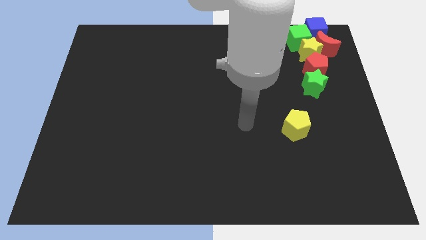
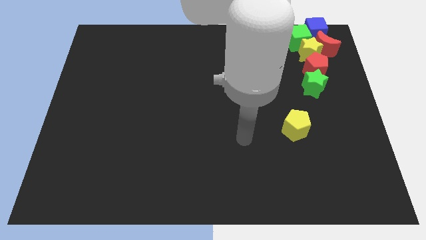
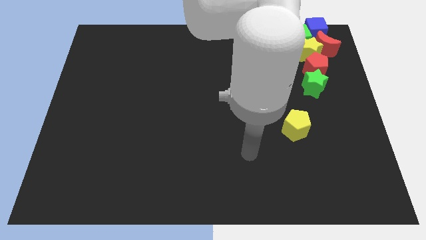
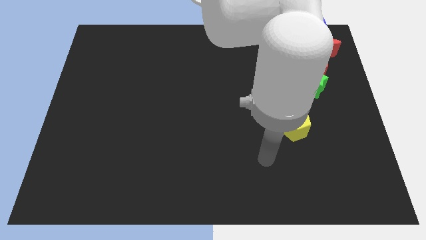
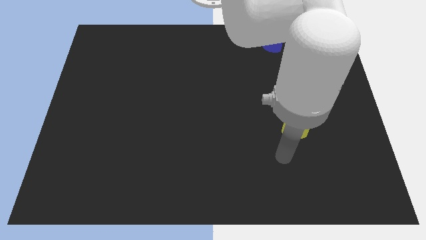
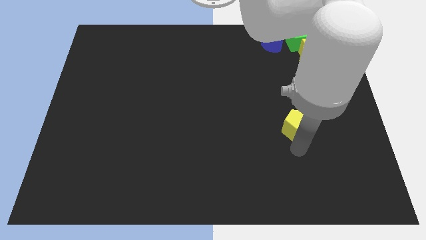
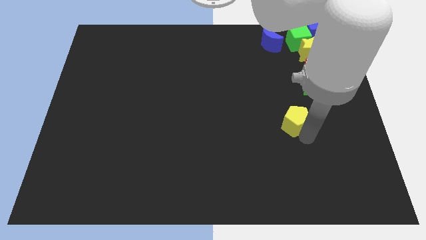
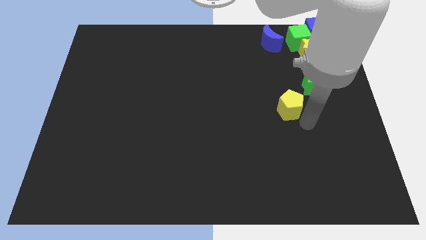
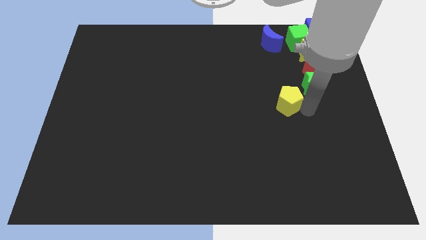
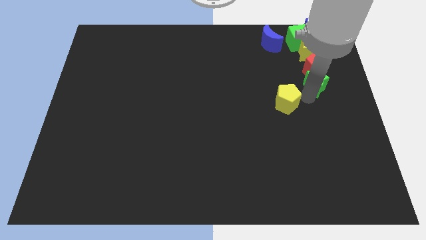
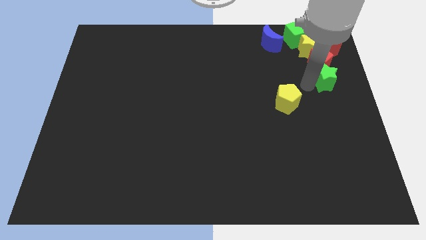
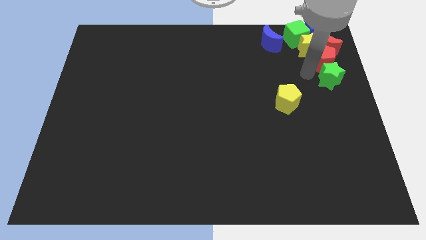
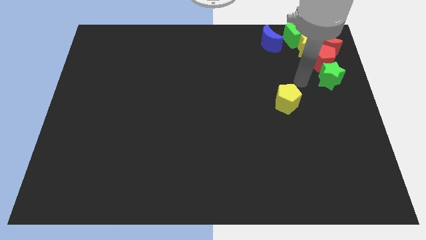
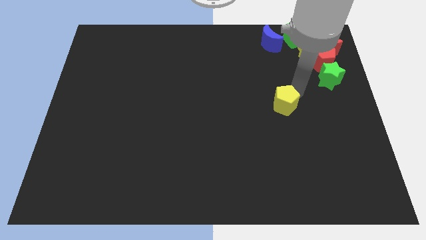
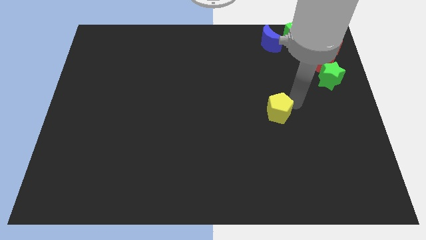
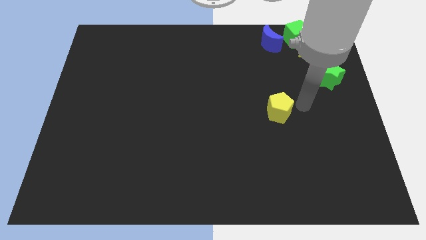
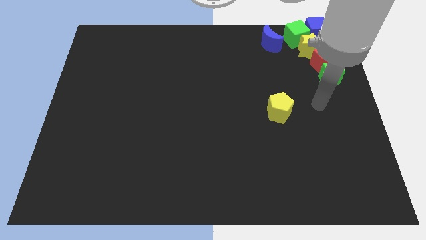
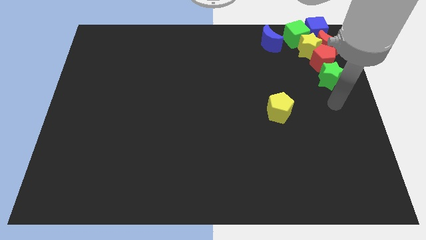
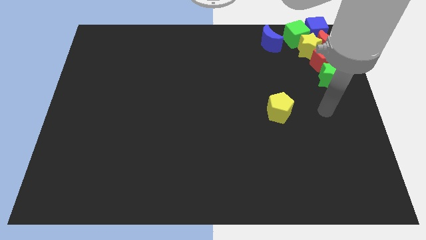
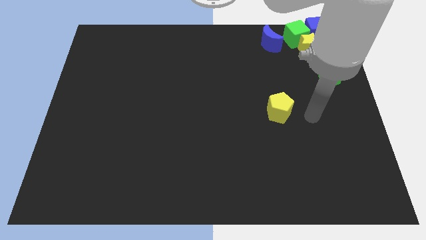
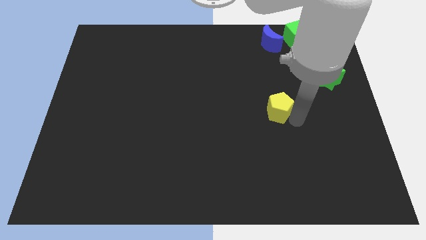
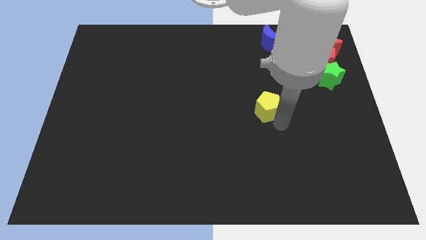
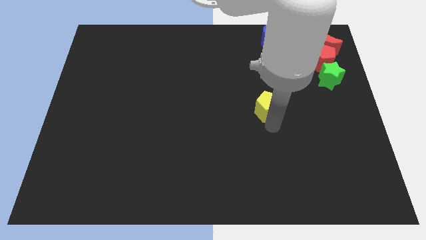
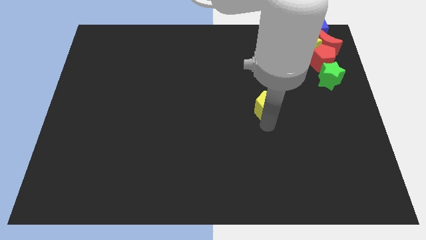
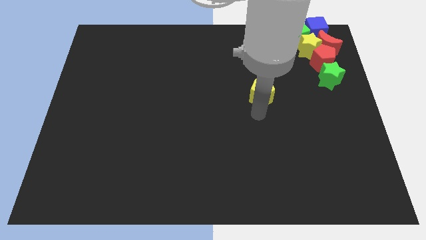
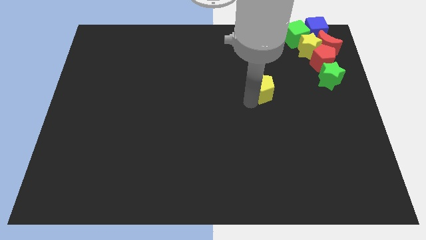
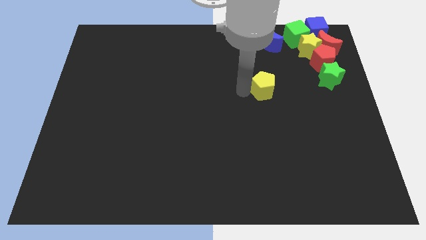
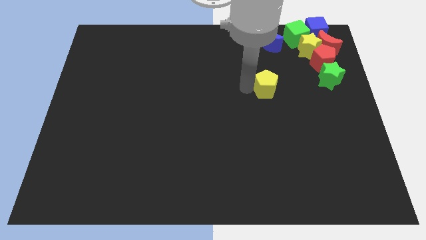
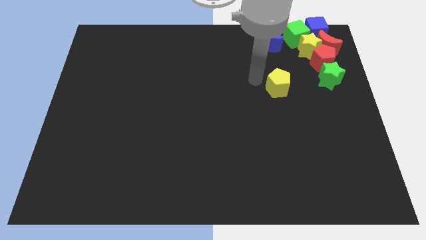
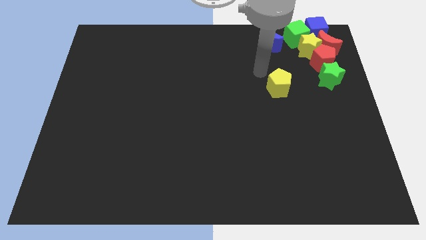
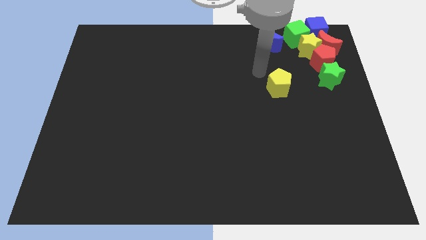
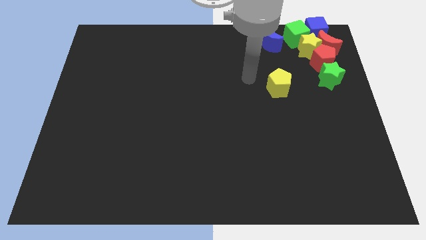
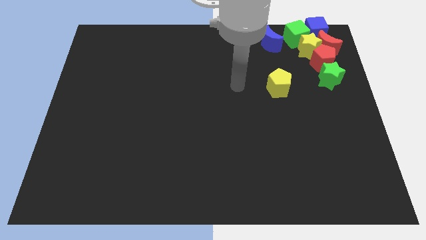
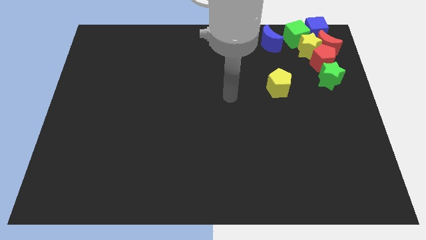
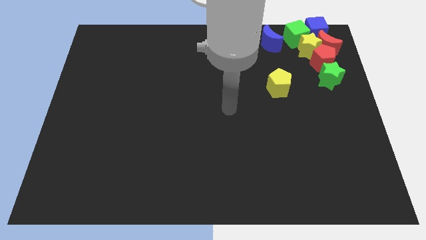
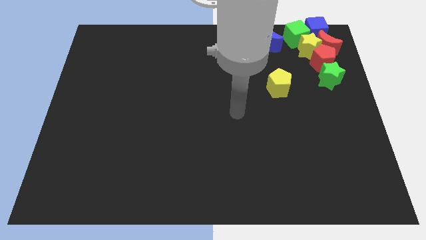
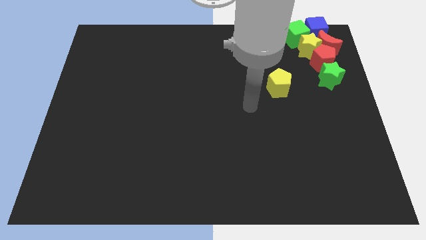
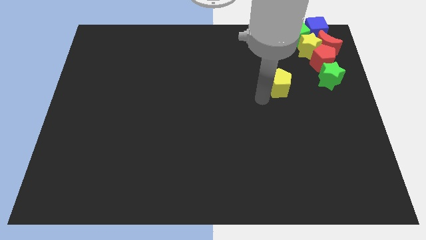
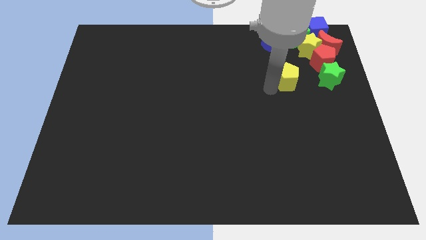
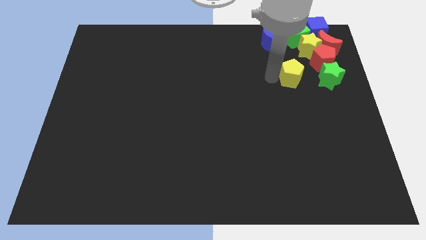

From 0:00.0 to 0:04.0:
put the yellow pentagon parallel left to the green star

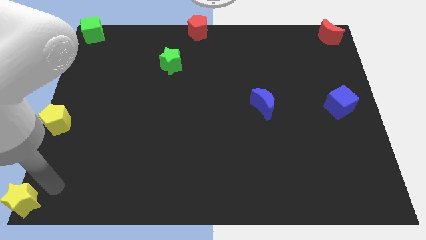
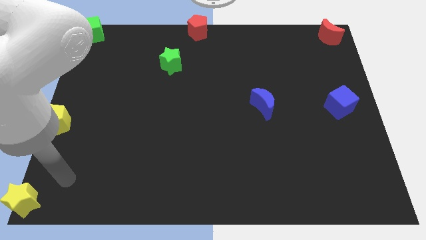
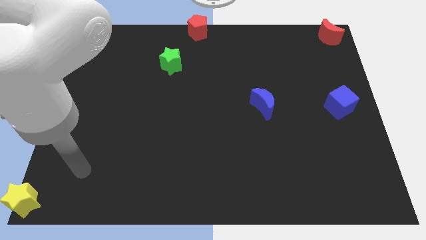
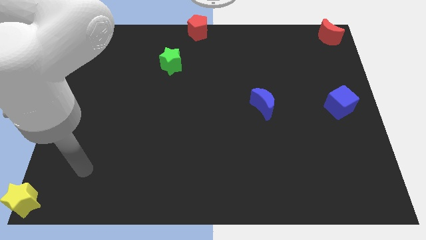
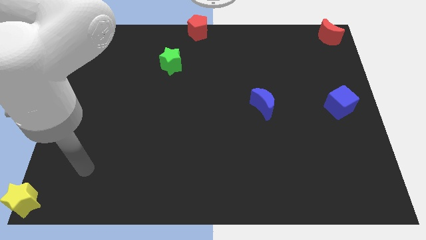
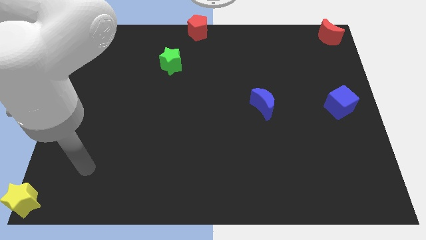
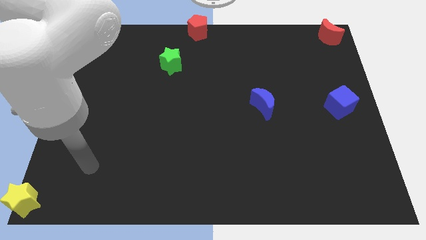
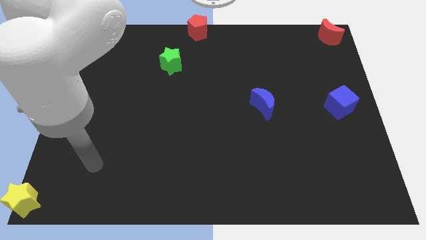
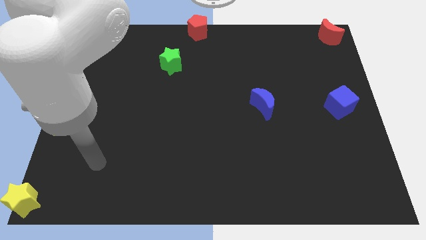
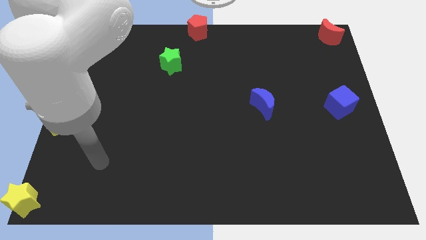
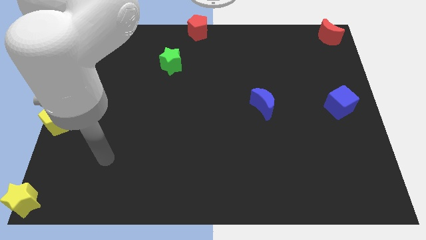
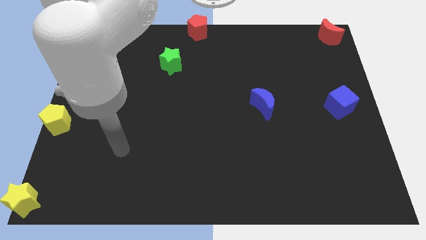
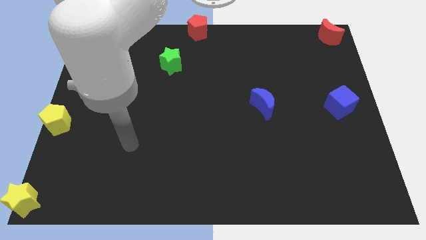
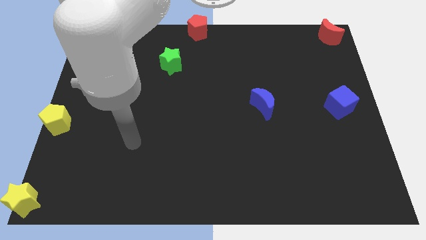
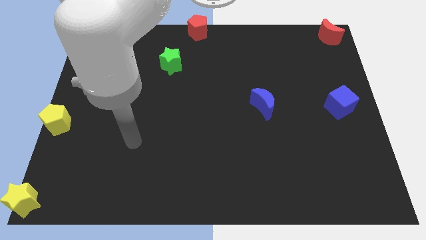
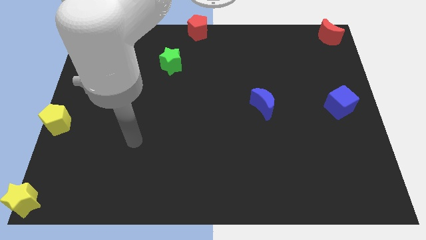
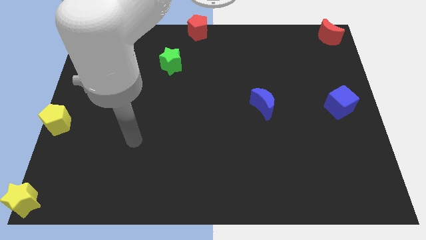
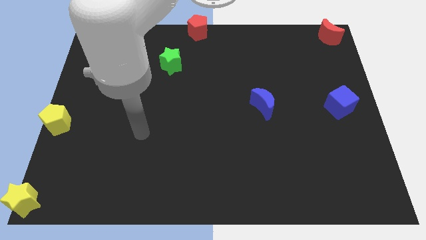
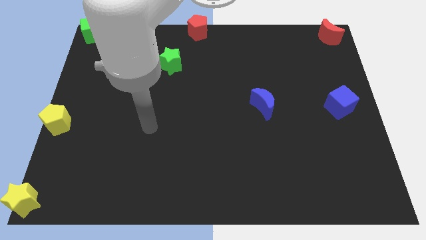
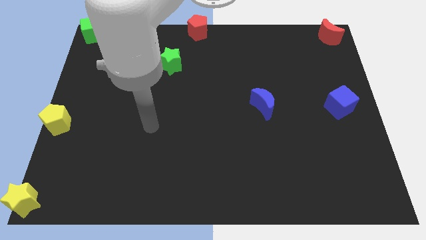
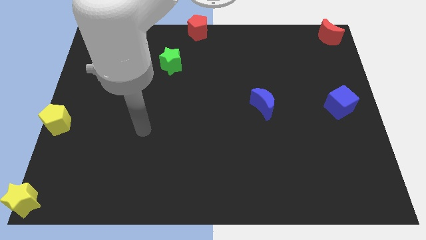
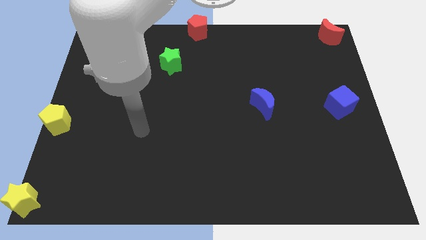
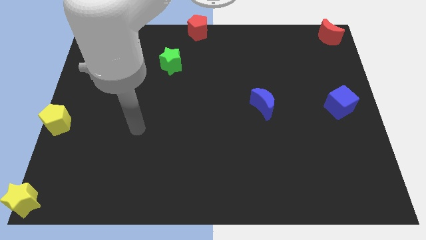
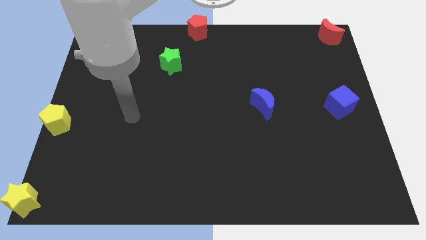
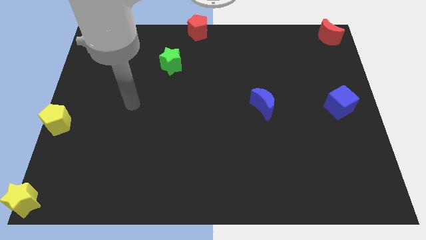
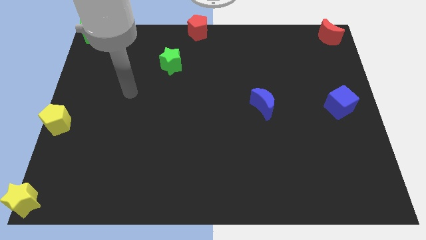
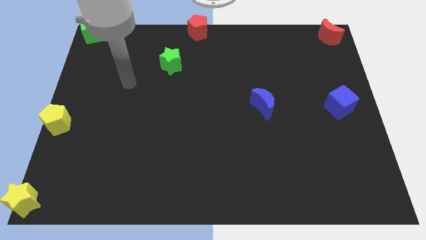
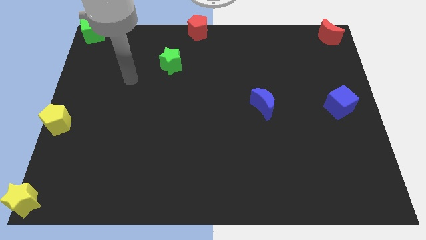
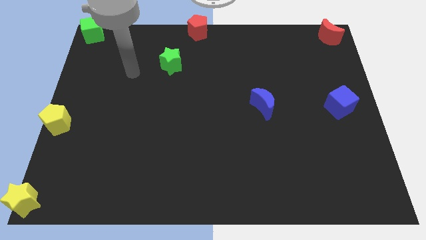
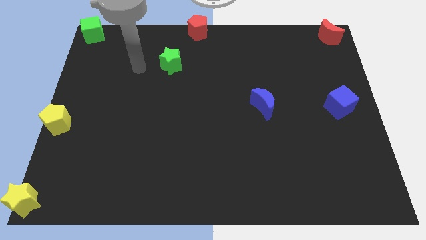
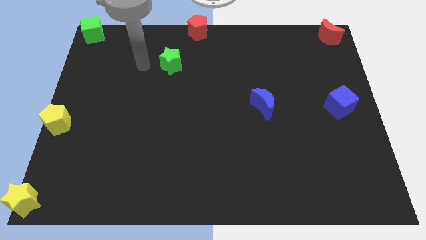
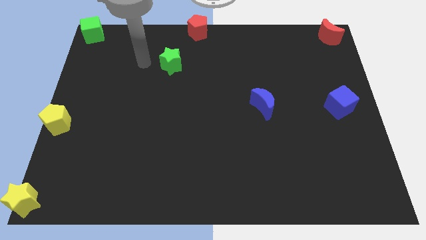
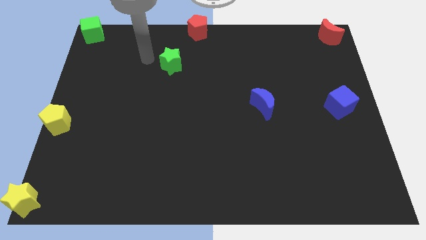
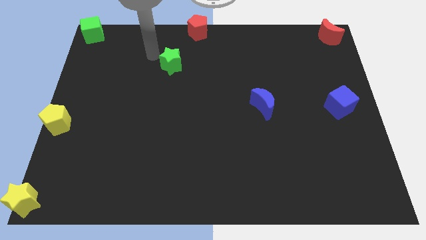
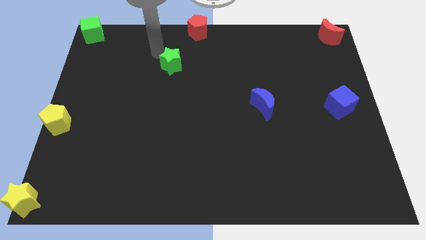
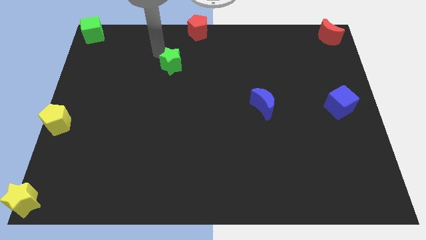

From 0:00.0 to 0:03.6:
move your arm above the green star

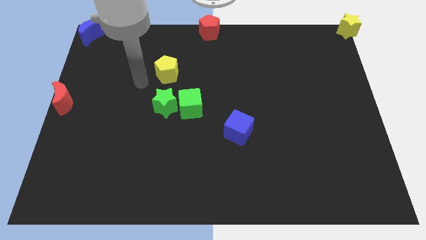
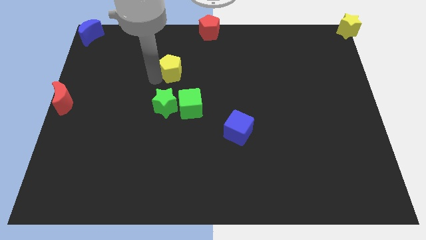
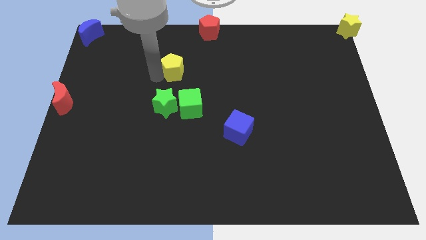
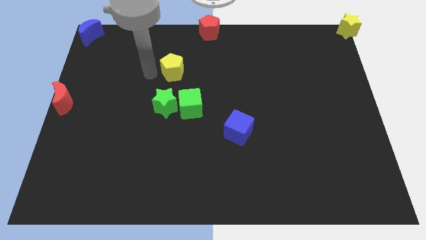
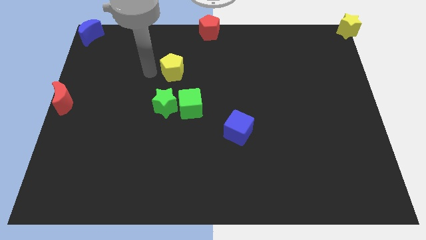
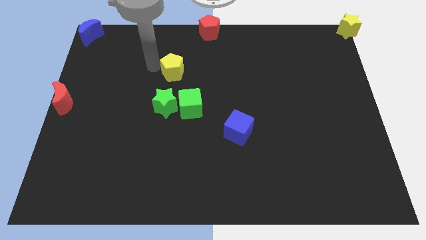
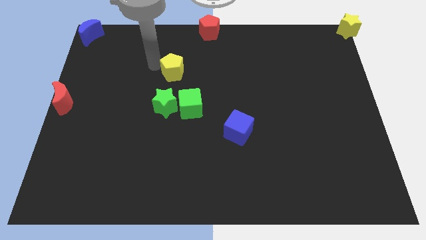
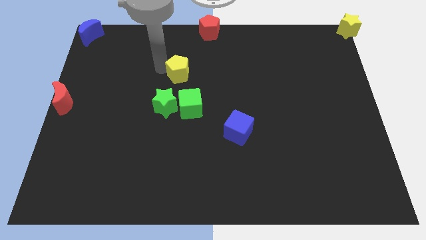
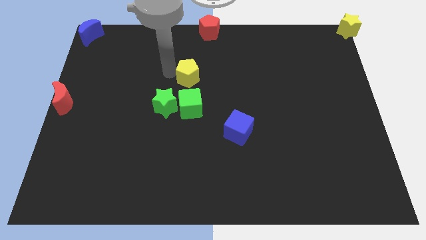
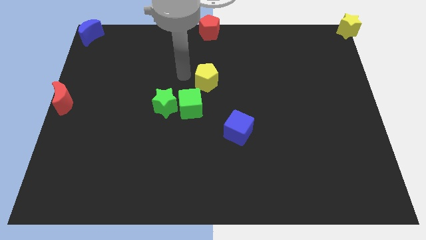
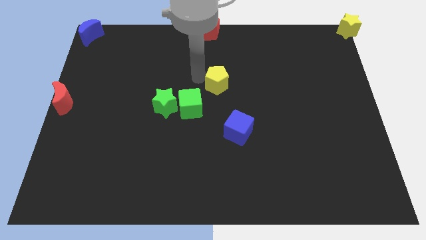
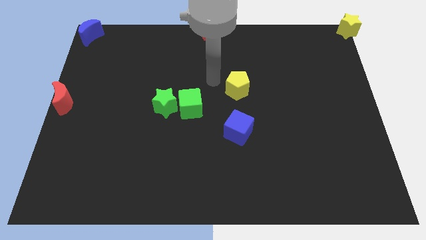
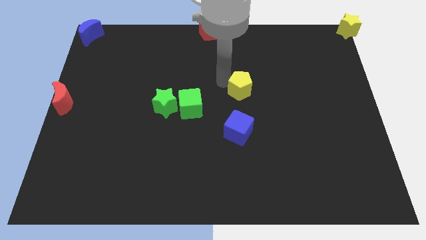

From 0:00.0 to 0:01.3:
place the yellow pentagon above the blue cube
